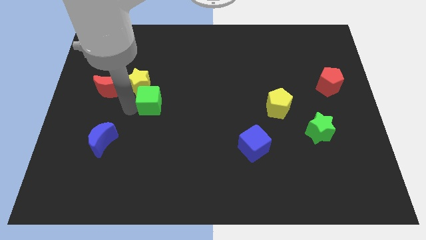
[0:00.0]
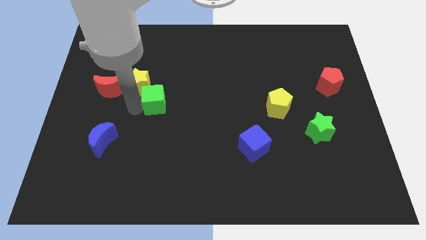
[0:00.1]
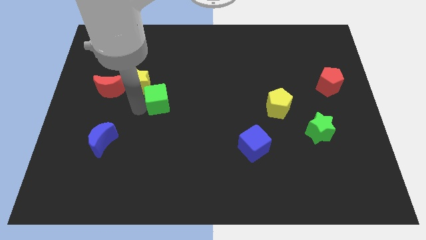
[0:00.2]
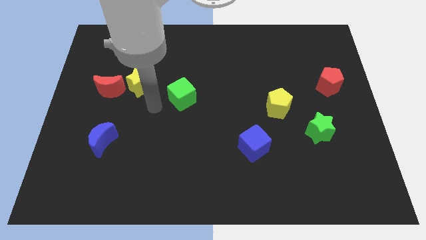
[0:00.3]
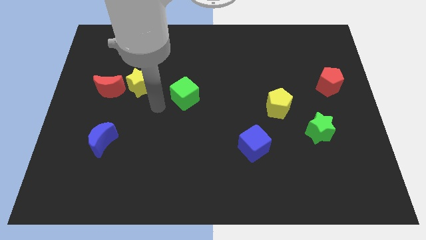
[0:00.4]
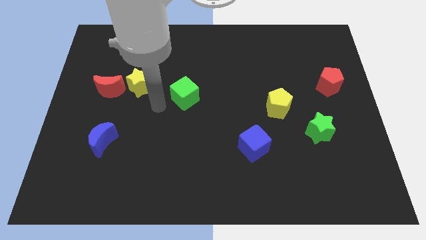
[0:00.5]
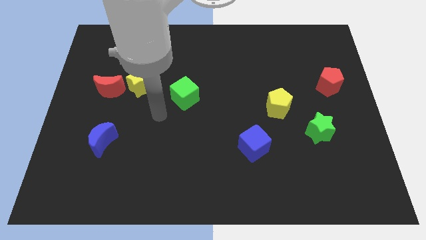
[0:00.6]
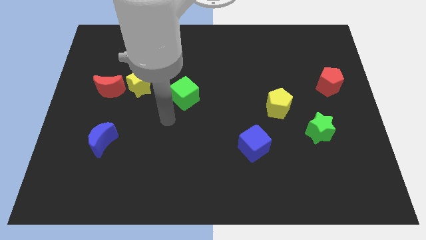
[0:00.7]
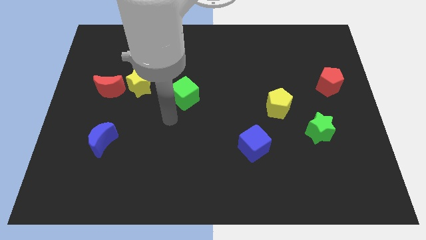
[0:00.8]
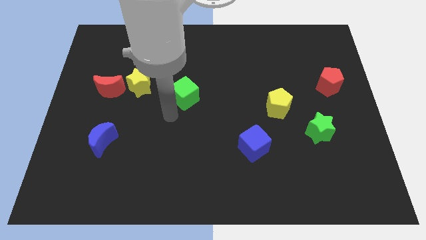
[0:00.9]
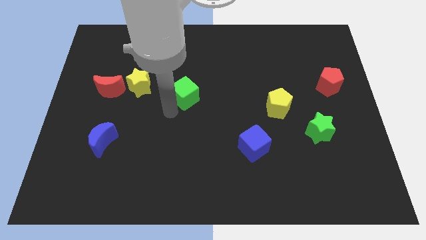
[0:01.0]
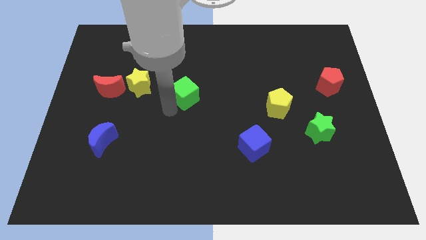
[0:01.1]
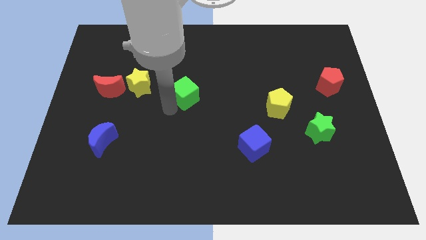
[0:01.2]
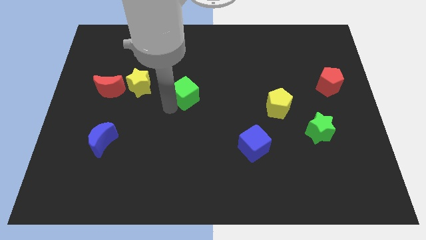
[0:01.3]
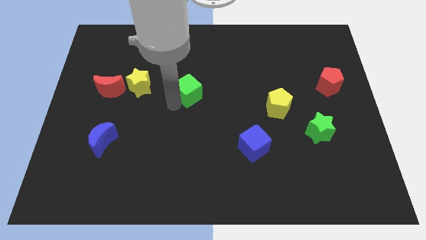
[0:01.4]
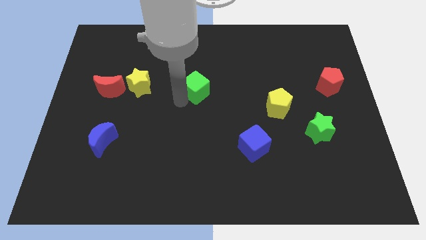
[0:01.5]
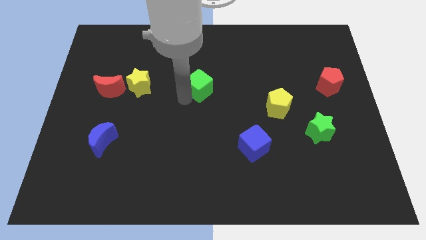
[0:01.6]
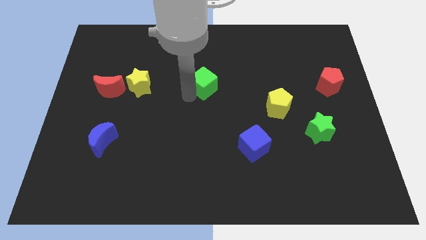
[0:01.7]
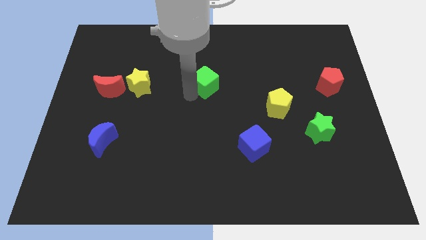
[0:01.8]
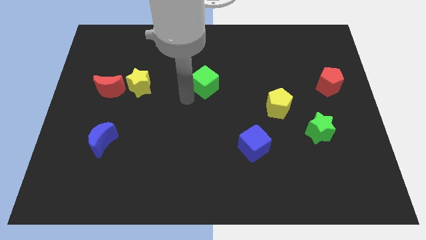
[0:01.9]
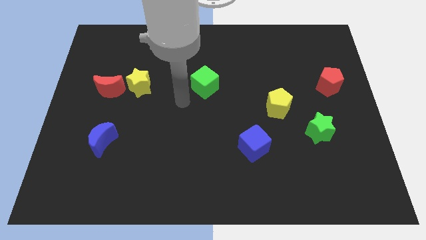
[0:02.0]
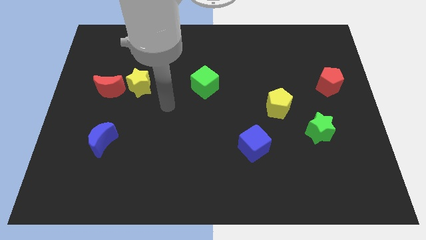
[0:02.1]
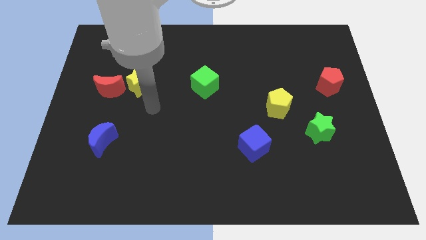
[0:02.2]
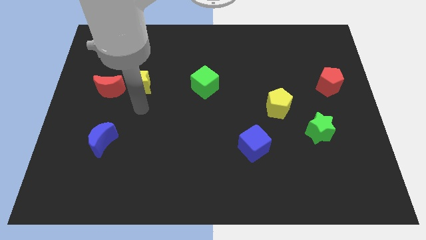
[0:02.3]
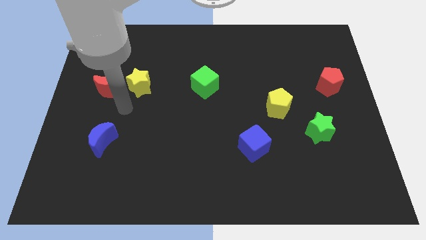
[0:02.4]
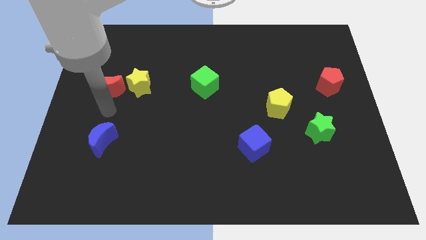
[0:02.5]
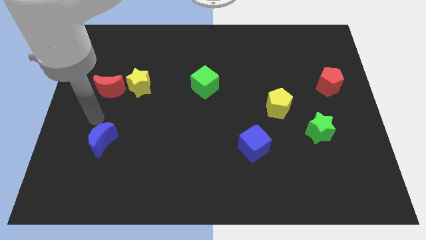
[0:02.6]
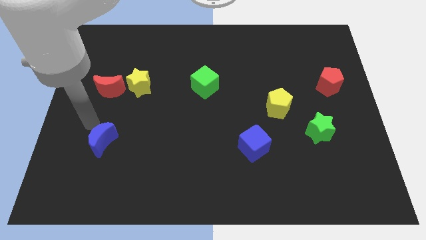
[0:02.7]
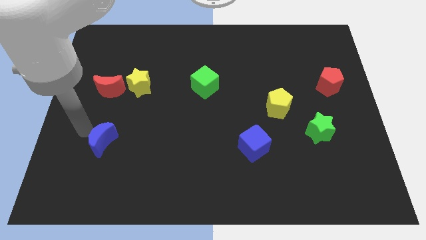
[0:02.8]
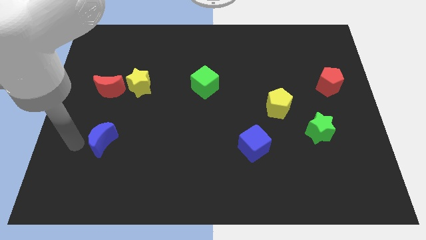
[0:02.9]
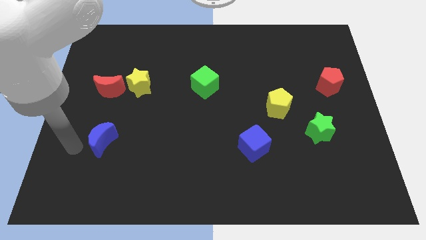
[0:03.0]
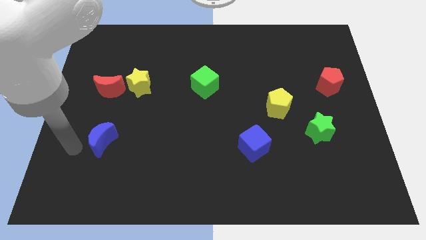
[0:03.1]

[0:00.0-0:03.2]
place green cube to the right of yellow star

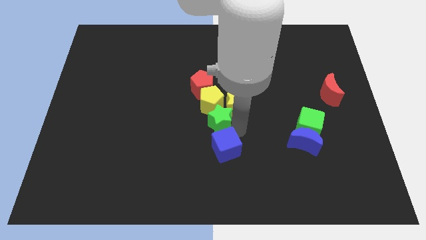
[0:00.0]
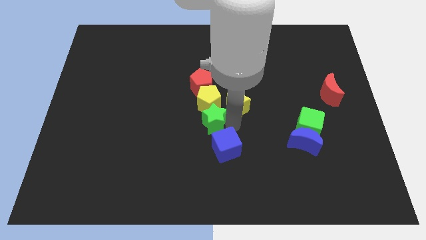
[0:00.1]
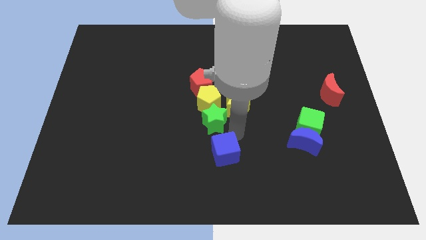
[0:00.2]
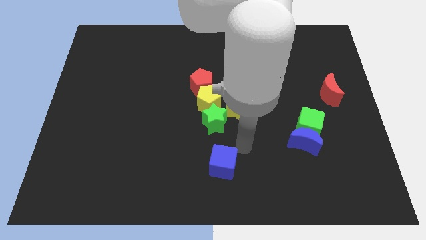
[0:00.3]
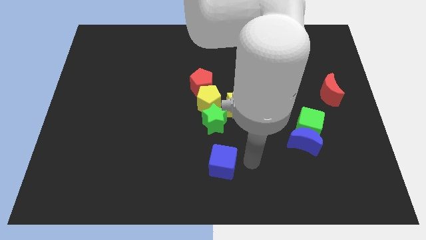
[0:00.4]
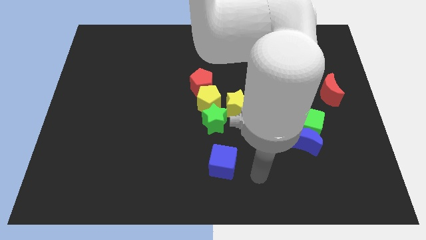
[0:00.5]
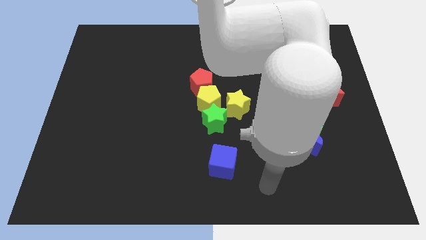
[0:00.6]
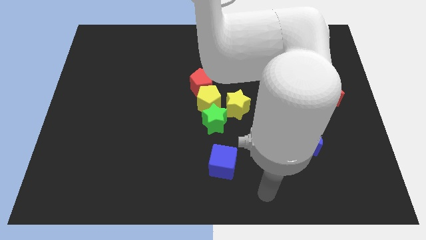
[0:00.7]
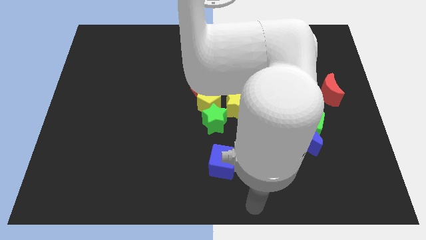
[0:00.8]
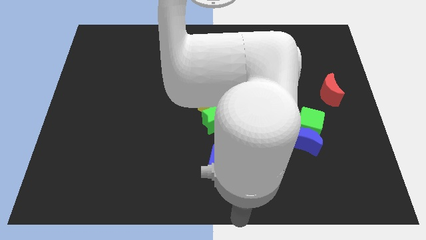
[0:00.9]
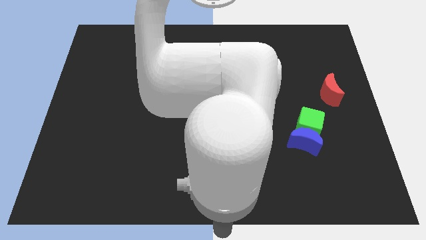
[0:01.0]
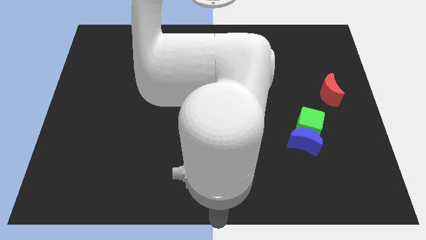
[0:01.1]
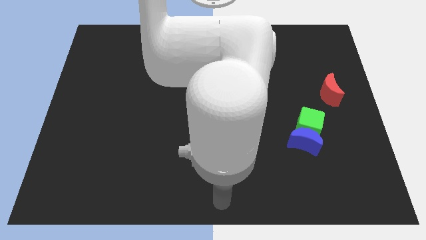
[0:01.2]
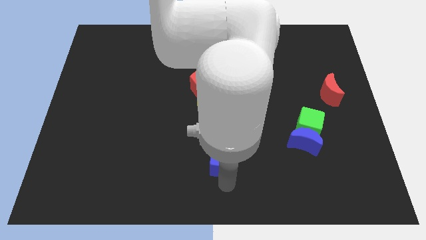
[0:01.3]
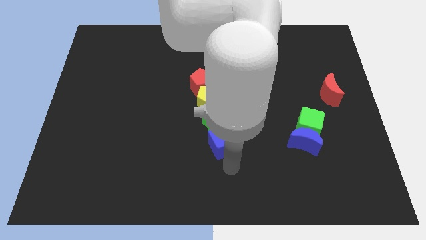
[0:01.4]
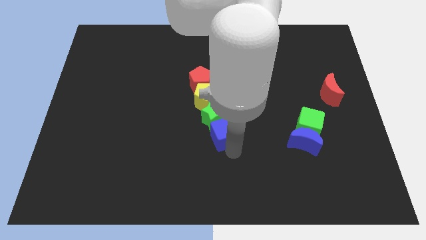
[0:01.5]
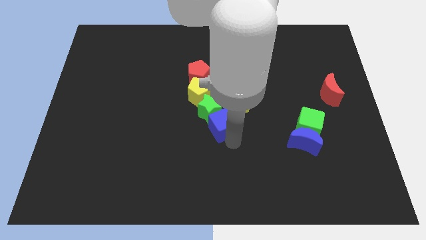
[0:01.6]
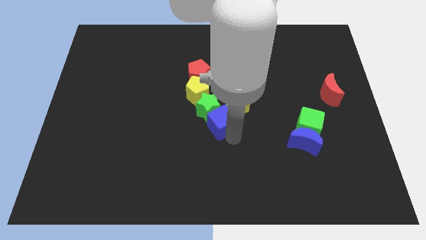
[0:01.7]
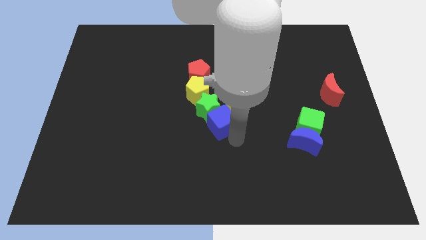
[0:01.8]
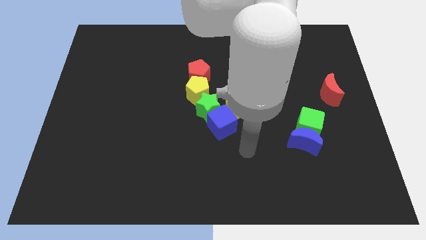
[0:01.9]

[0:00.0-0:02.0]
push the blue cube close to the green star

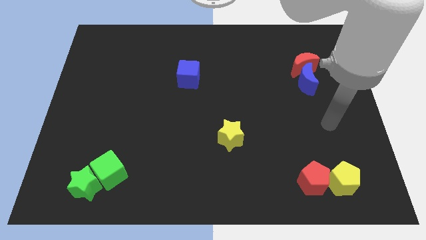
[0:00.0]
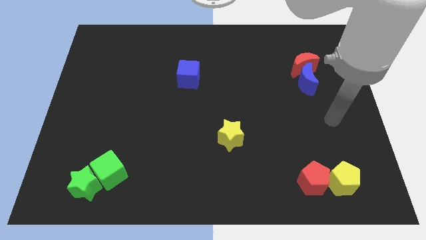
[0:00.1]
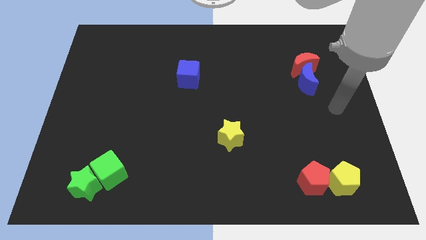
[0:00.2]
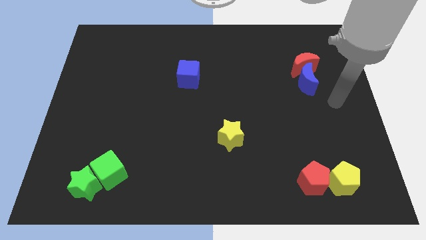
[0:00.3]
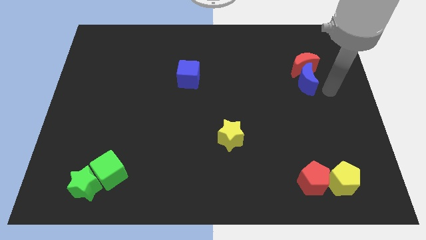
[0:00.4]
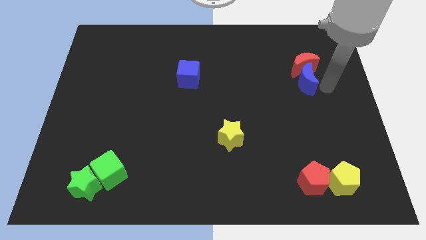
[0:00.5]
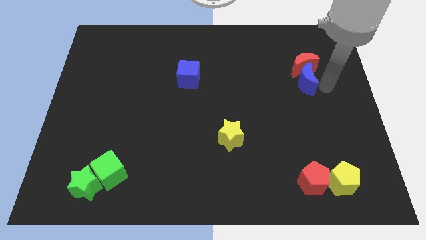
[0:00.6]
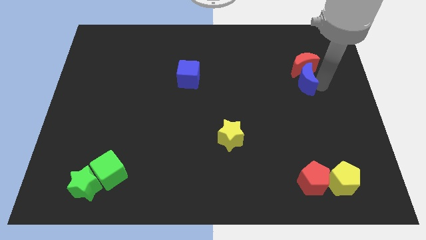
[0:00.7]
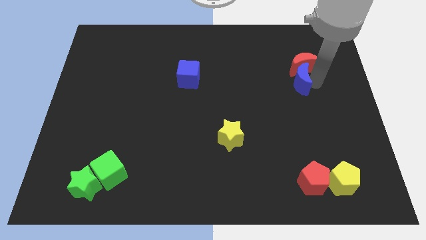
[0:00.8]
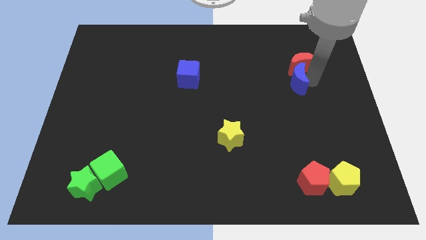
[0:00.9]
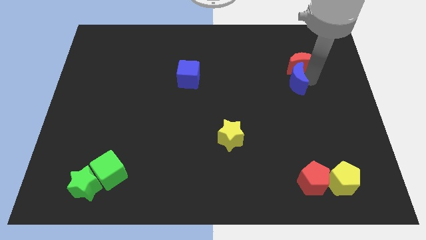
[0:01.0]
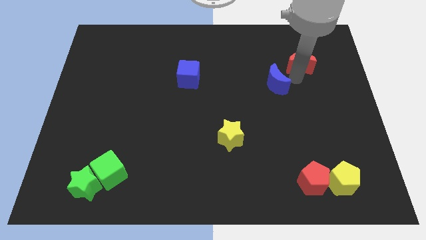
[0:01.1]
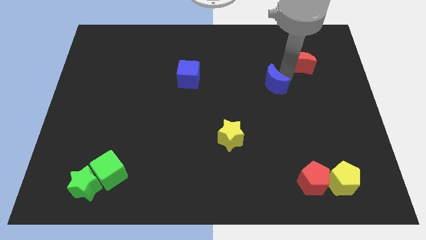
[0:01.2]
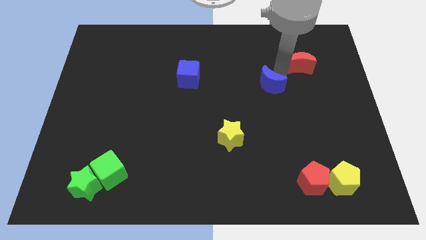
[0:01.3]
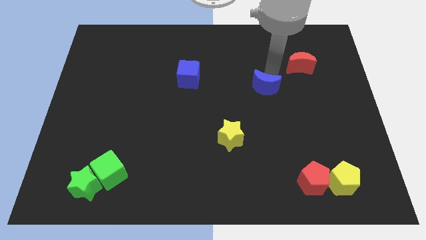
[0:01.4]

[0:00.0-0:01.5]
move the blue crescent away from the red crescent

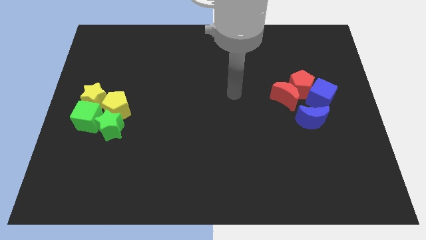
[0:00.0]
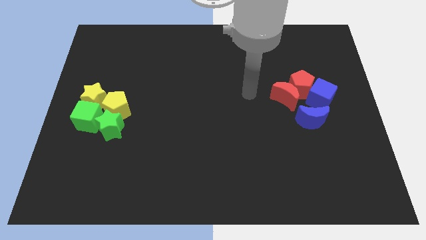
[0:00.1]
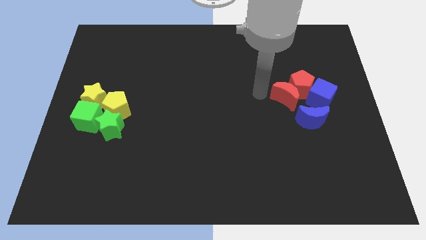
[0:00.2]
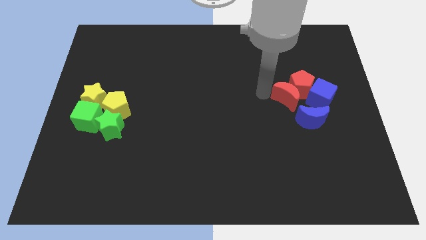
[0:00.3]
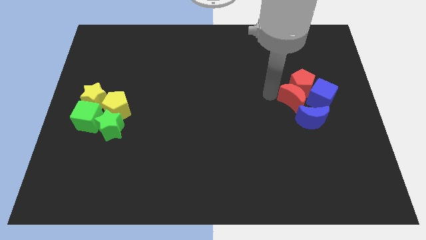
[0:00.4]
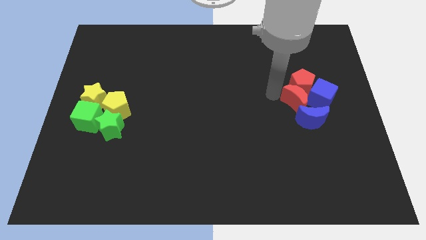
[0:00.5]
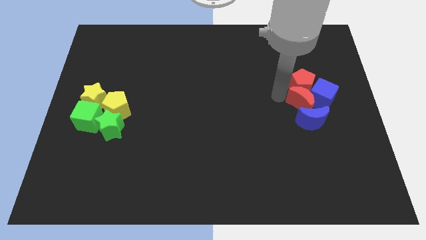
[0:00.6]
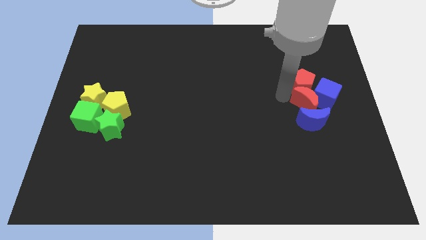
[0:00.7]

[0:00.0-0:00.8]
move the red crescent close to the blue cube

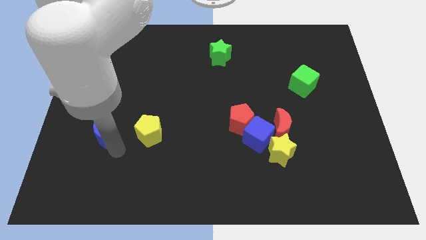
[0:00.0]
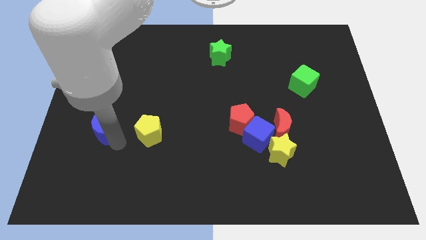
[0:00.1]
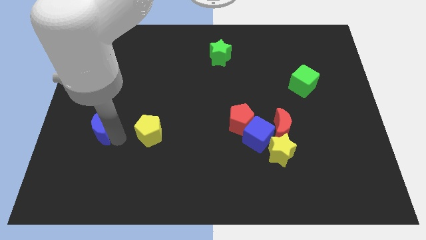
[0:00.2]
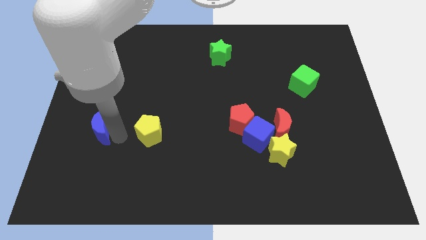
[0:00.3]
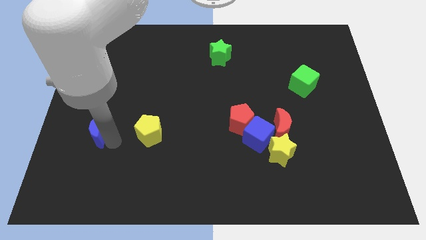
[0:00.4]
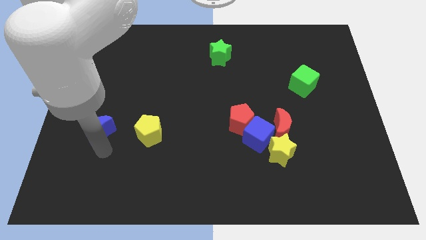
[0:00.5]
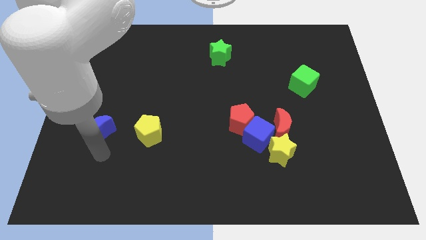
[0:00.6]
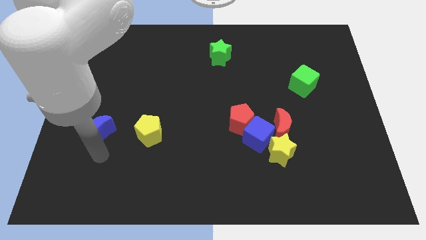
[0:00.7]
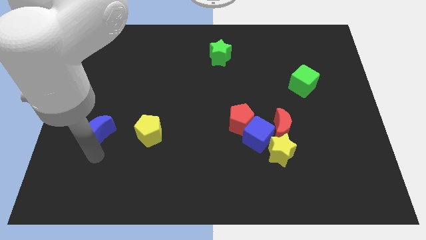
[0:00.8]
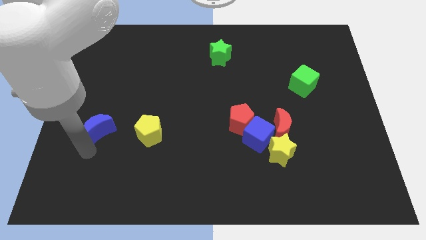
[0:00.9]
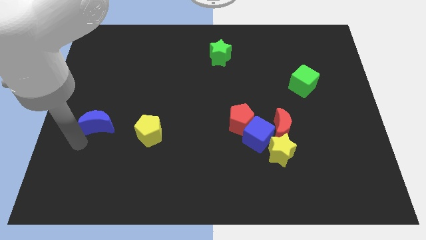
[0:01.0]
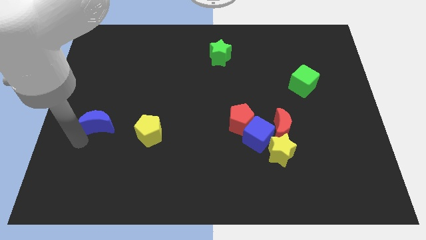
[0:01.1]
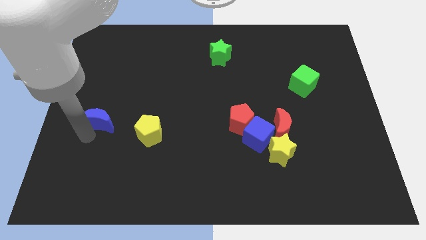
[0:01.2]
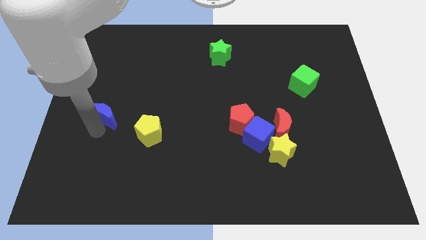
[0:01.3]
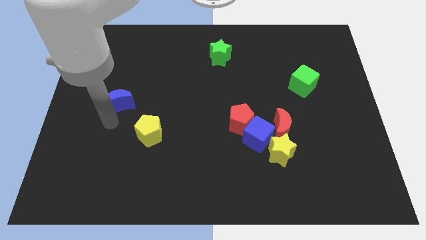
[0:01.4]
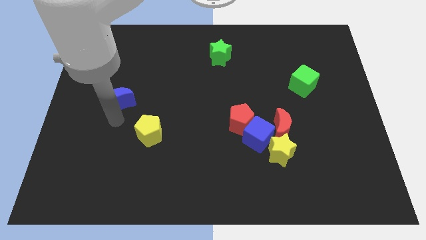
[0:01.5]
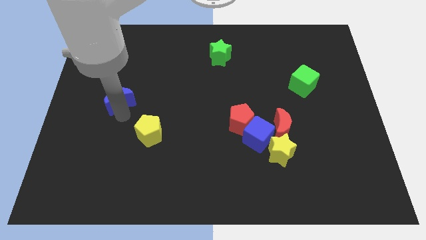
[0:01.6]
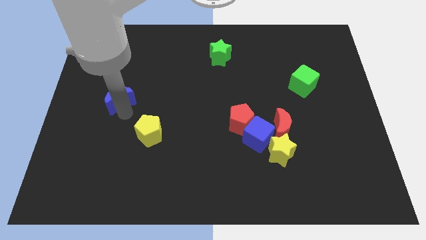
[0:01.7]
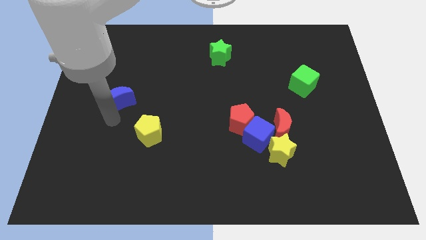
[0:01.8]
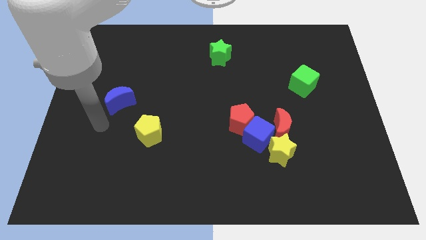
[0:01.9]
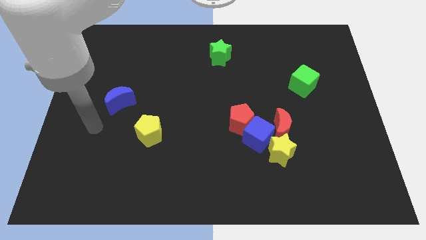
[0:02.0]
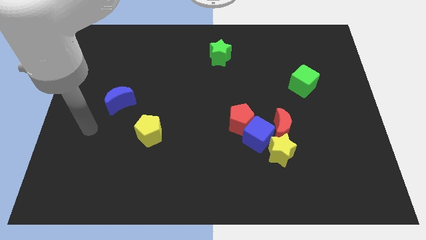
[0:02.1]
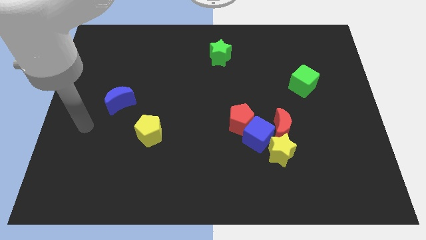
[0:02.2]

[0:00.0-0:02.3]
place the blue moon diagonally top left to the yellow pentagon
